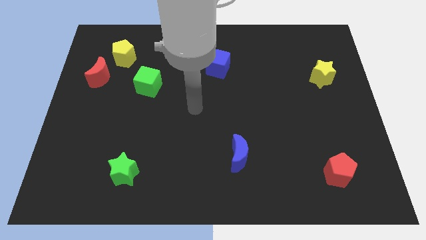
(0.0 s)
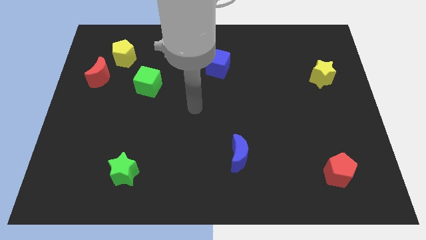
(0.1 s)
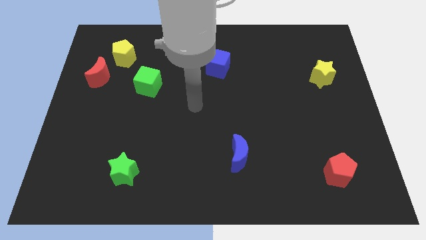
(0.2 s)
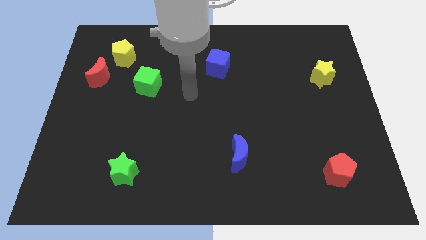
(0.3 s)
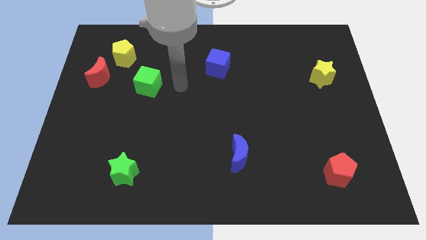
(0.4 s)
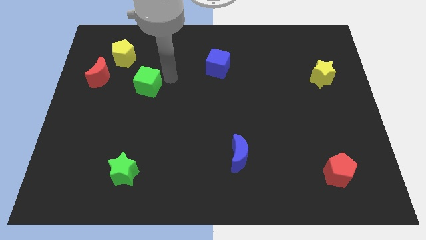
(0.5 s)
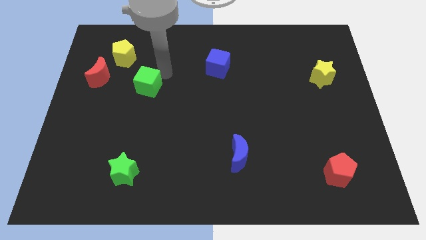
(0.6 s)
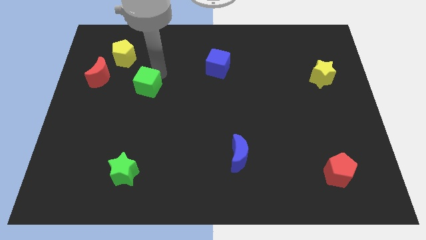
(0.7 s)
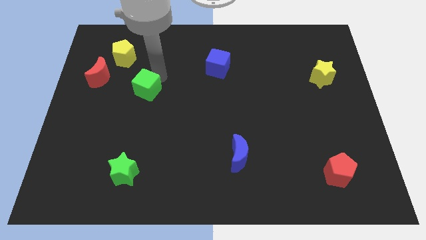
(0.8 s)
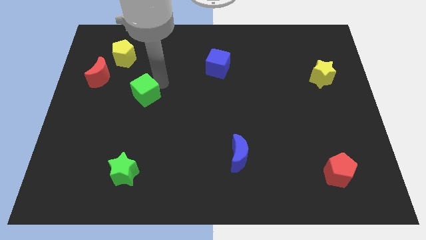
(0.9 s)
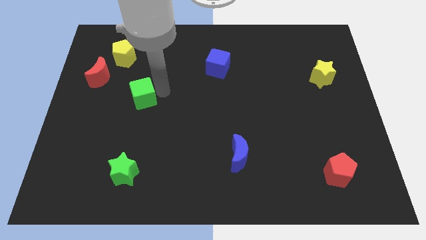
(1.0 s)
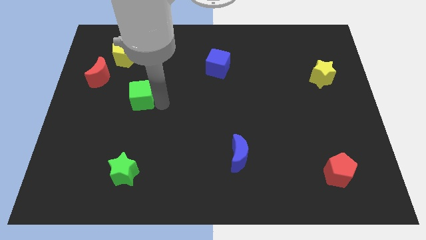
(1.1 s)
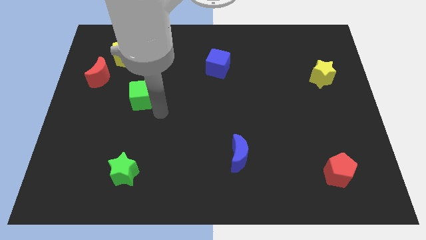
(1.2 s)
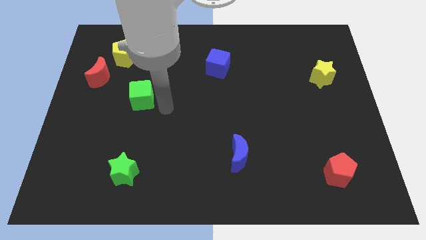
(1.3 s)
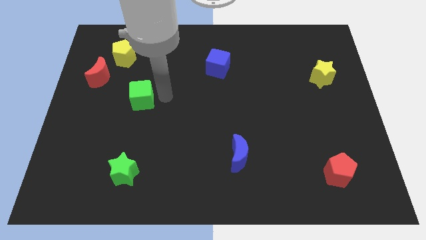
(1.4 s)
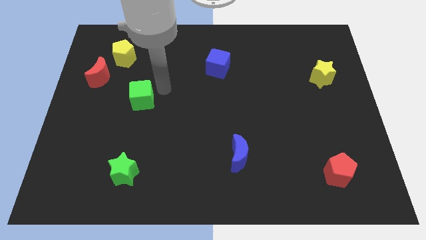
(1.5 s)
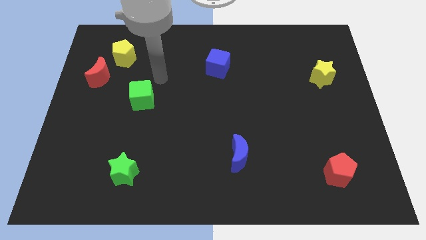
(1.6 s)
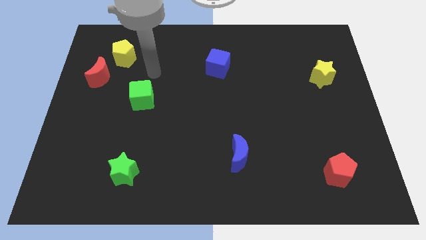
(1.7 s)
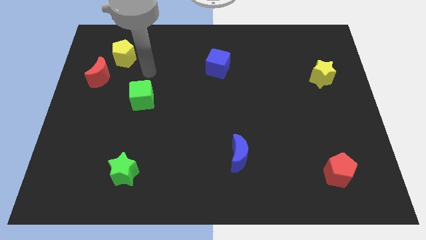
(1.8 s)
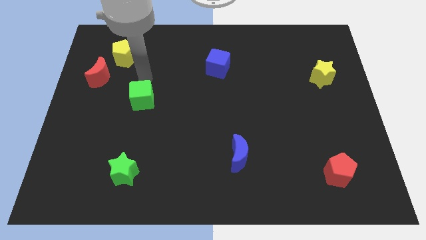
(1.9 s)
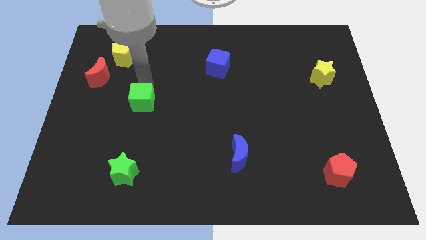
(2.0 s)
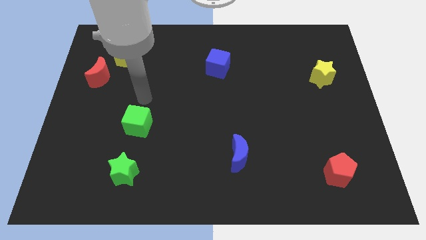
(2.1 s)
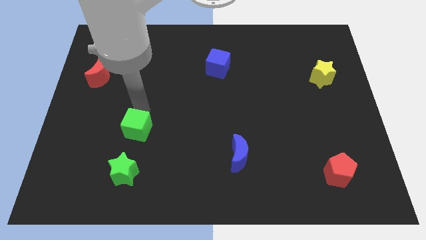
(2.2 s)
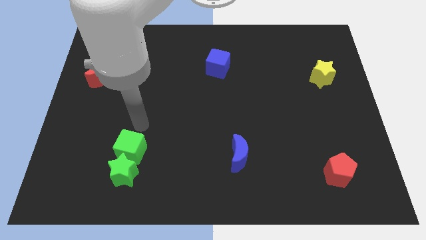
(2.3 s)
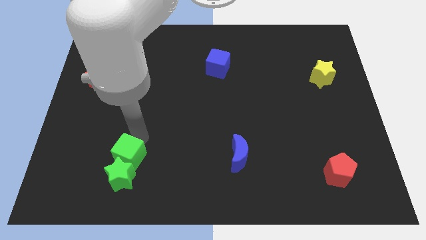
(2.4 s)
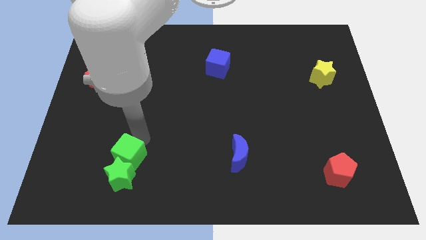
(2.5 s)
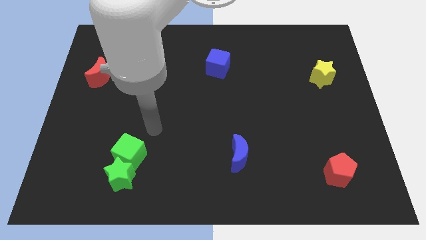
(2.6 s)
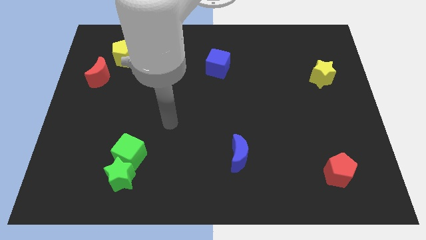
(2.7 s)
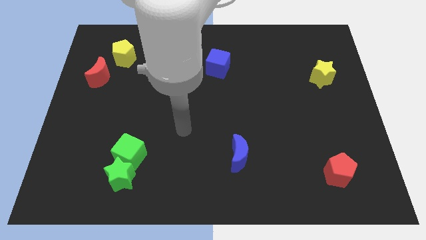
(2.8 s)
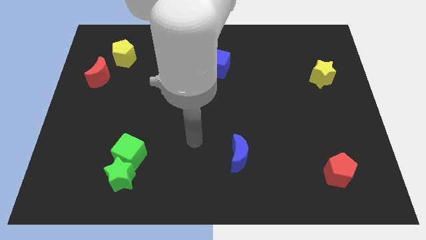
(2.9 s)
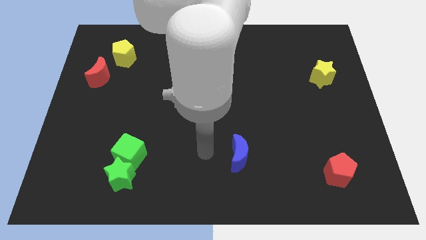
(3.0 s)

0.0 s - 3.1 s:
push green cube into the green star

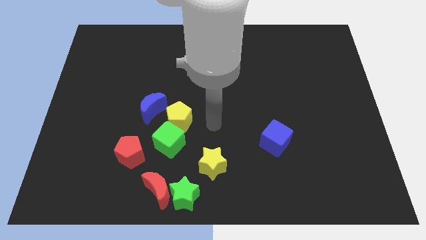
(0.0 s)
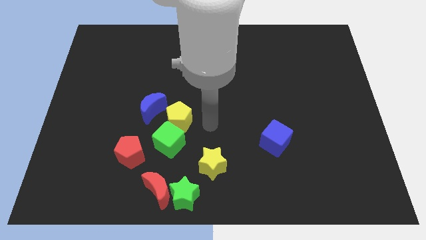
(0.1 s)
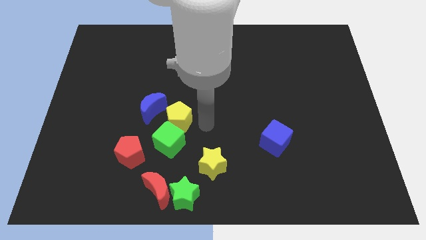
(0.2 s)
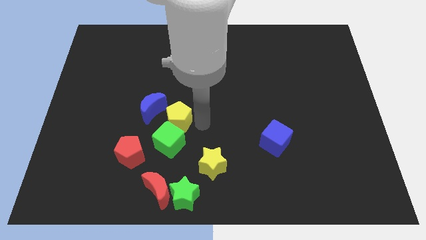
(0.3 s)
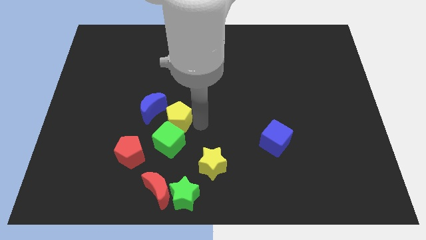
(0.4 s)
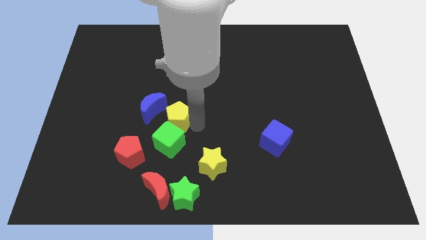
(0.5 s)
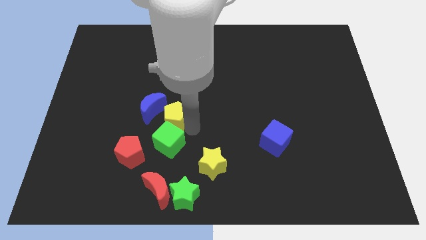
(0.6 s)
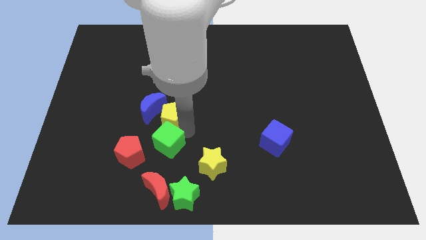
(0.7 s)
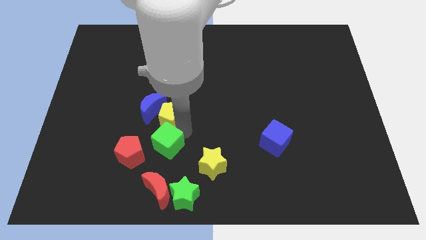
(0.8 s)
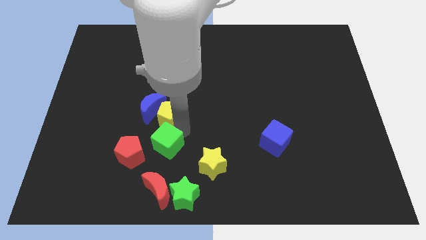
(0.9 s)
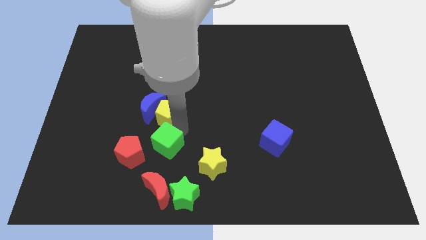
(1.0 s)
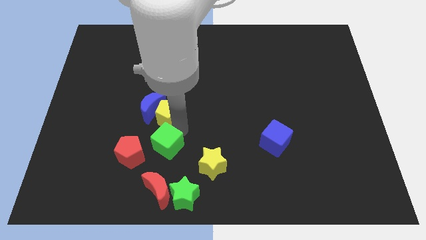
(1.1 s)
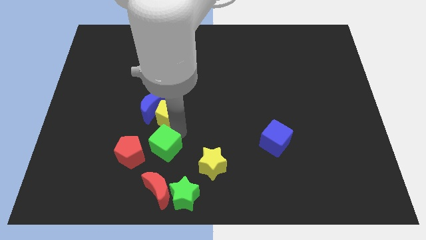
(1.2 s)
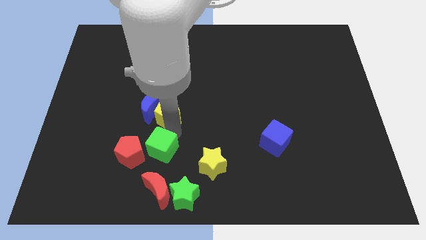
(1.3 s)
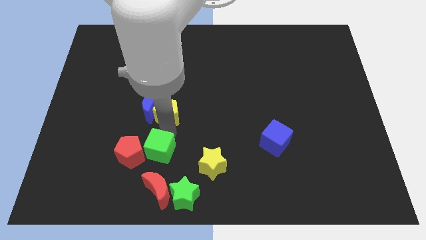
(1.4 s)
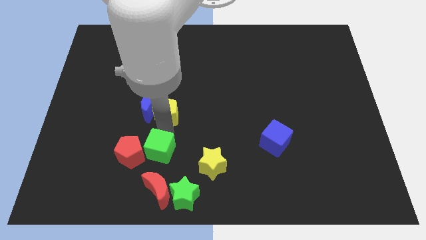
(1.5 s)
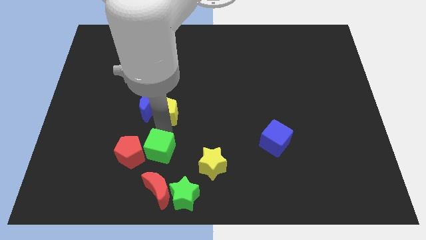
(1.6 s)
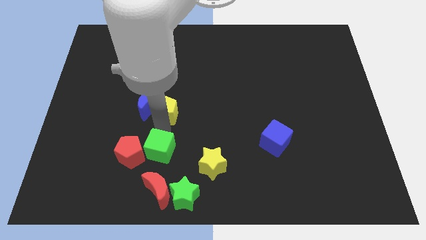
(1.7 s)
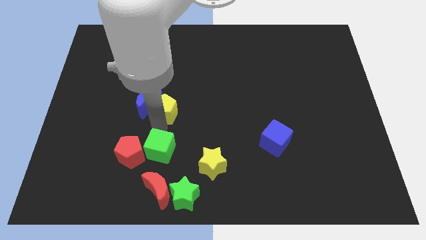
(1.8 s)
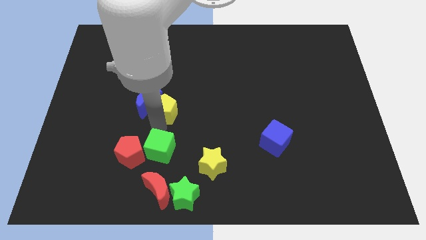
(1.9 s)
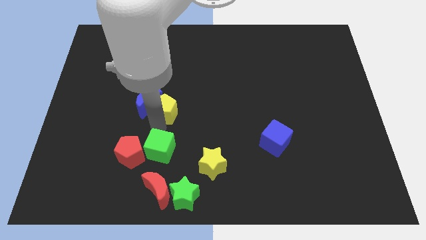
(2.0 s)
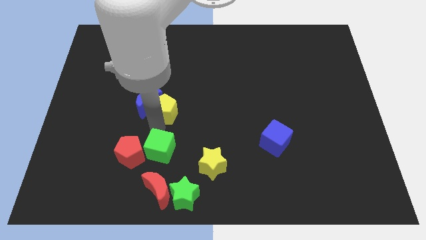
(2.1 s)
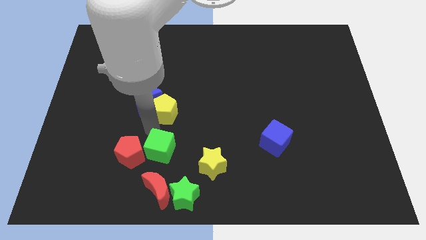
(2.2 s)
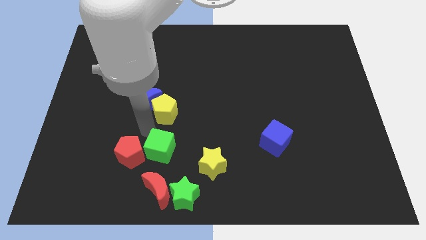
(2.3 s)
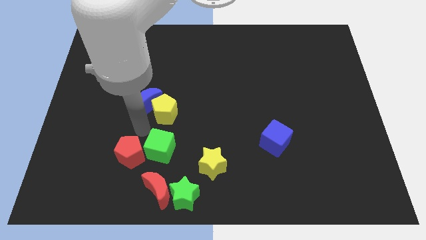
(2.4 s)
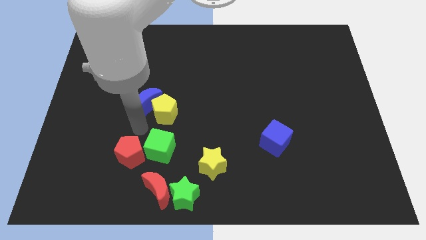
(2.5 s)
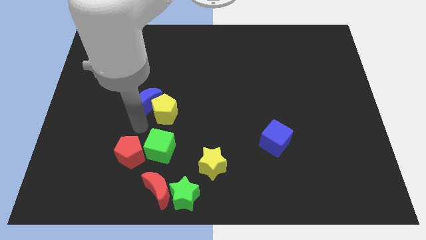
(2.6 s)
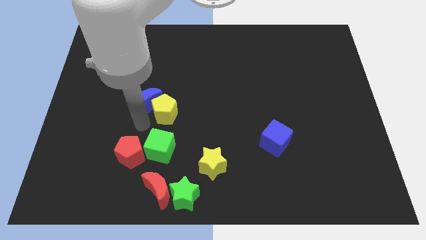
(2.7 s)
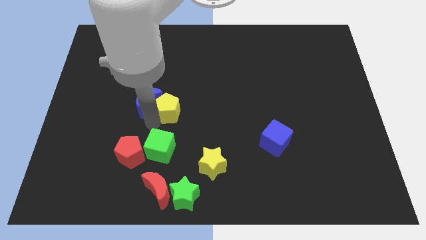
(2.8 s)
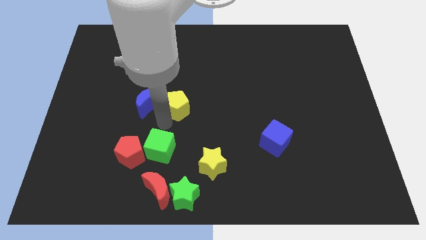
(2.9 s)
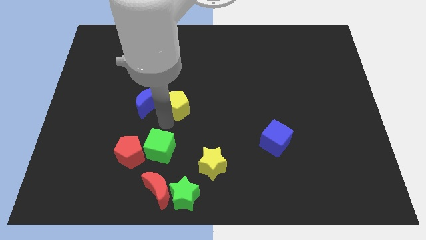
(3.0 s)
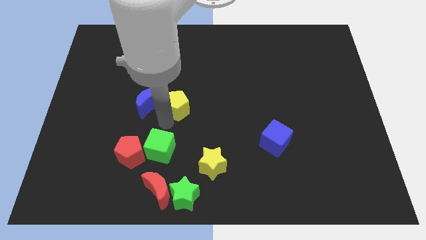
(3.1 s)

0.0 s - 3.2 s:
separate yellow pentagon and green cube

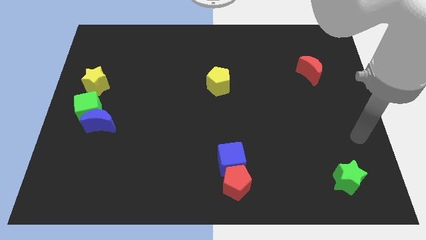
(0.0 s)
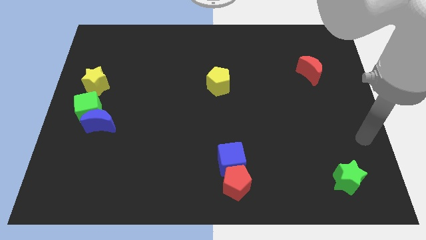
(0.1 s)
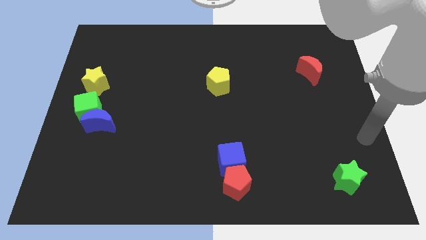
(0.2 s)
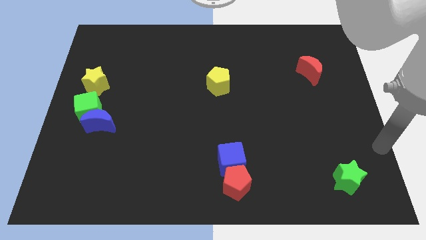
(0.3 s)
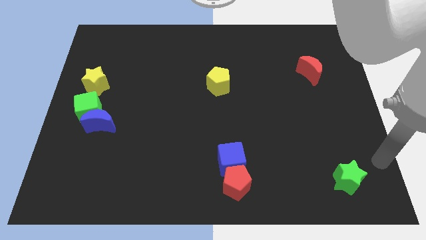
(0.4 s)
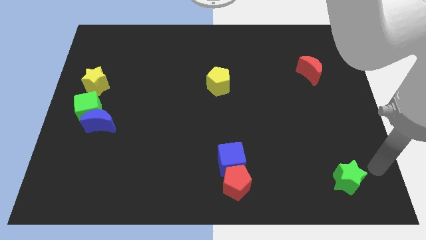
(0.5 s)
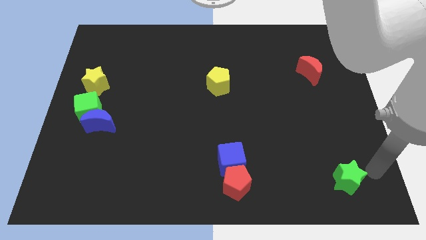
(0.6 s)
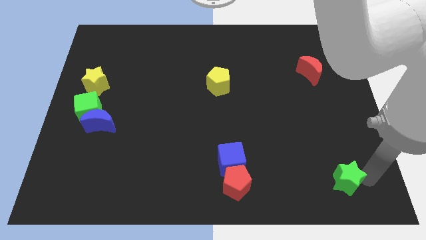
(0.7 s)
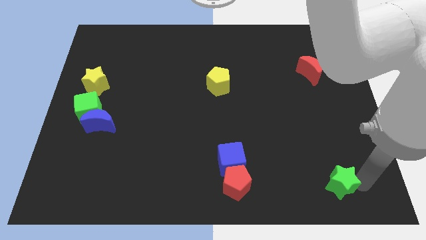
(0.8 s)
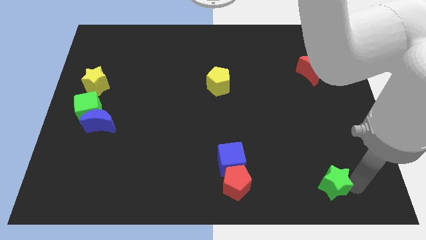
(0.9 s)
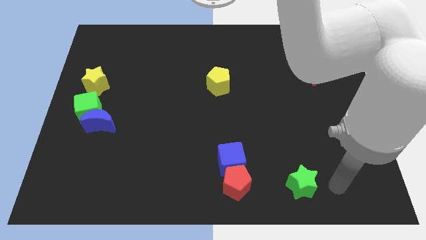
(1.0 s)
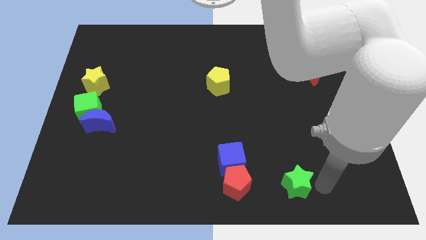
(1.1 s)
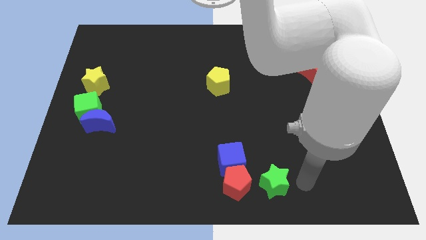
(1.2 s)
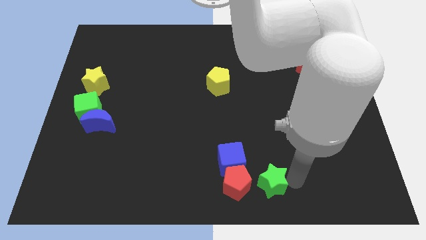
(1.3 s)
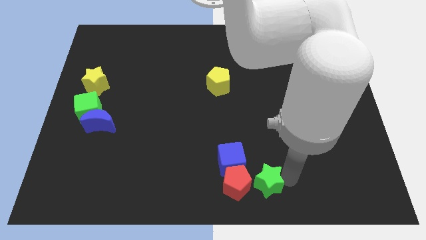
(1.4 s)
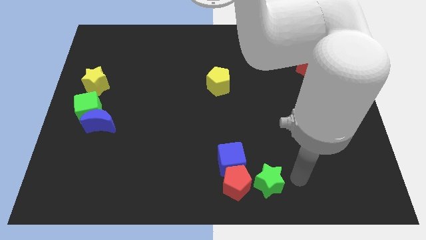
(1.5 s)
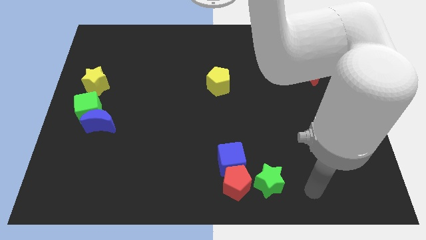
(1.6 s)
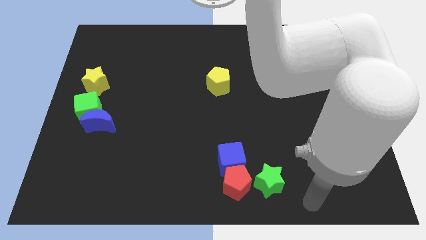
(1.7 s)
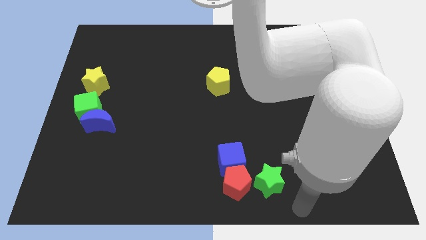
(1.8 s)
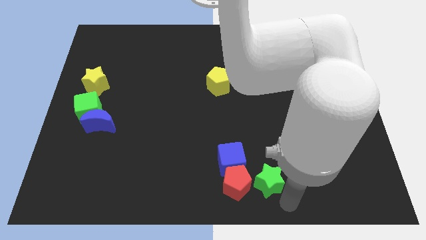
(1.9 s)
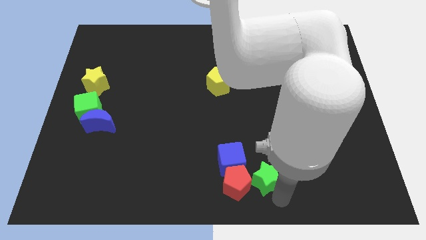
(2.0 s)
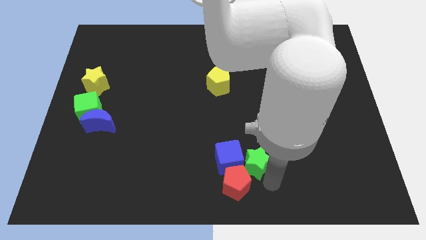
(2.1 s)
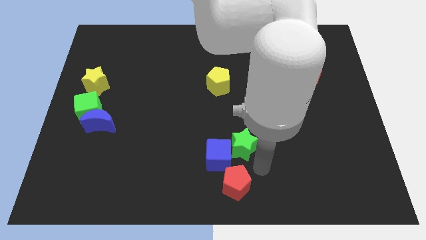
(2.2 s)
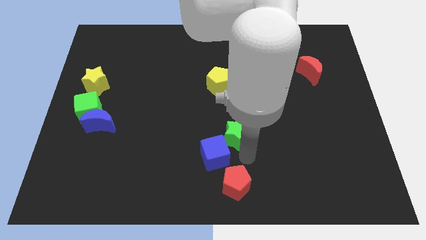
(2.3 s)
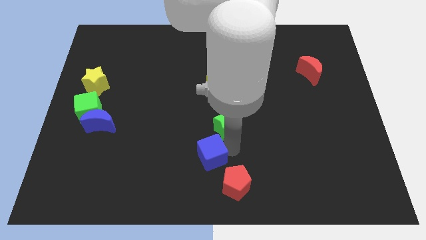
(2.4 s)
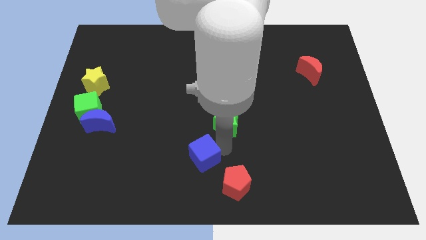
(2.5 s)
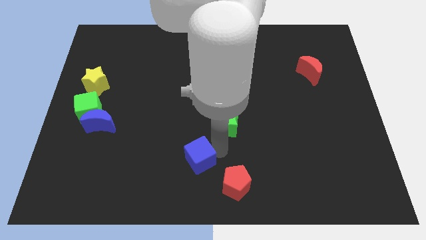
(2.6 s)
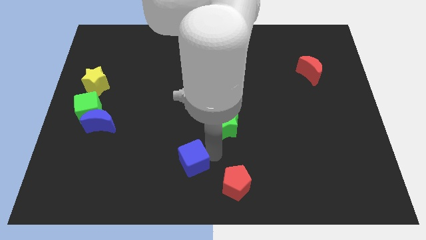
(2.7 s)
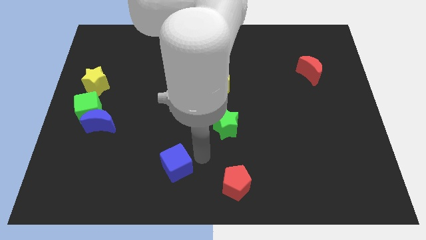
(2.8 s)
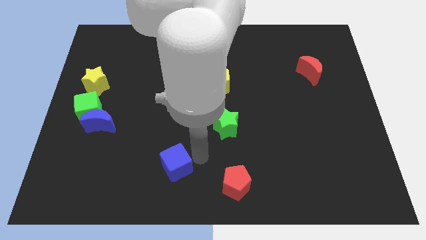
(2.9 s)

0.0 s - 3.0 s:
separate the blue cube and red pentagon with green star
